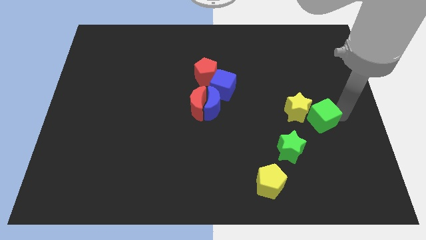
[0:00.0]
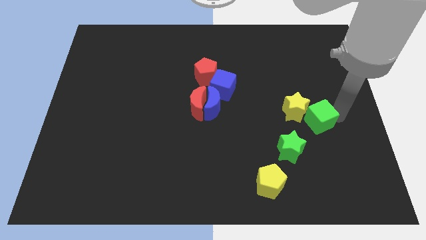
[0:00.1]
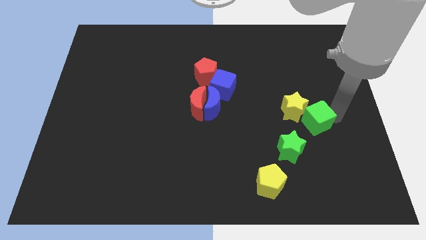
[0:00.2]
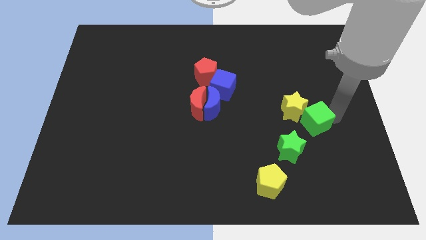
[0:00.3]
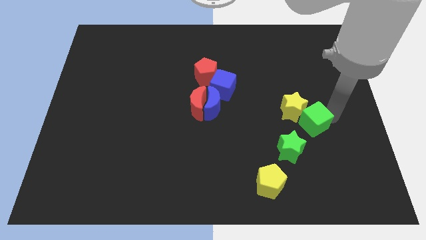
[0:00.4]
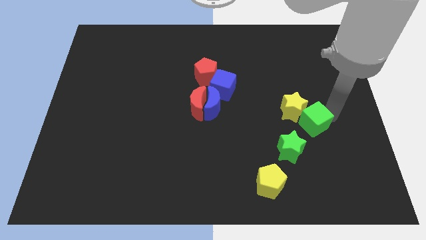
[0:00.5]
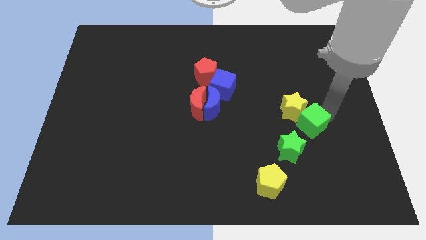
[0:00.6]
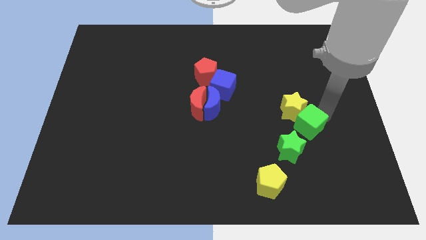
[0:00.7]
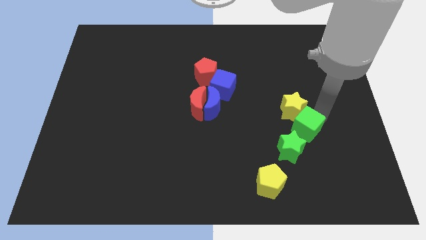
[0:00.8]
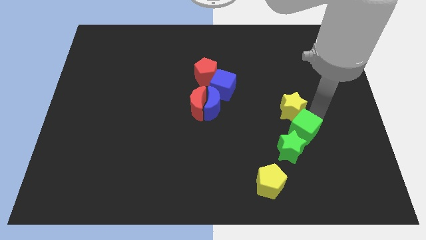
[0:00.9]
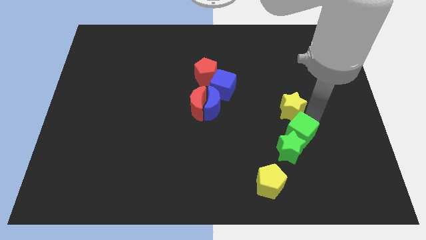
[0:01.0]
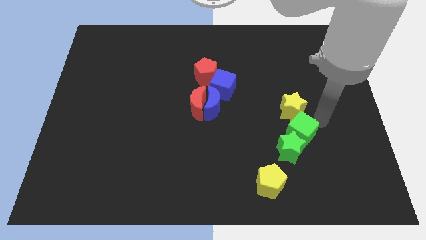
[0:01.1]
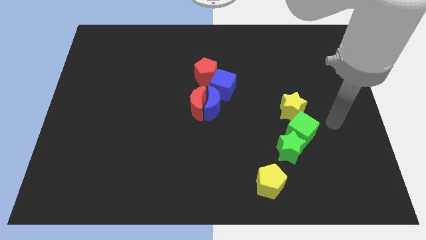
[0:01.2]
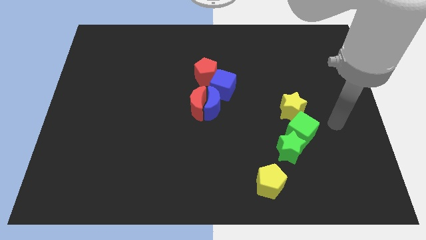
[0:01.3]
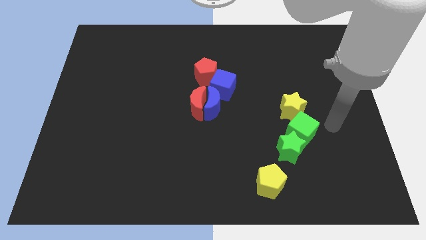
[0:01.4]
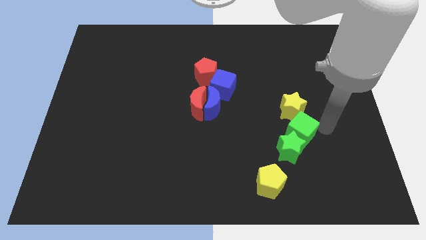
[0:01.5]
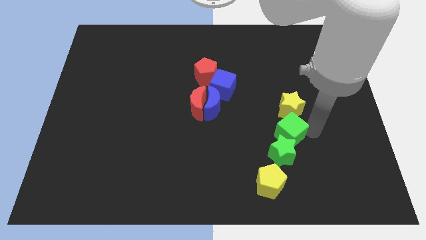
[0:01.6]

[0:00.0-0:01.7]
place the green cube below the yellow star

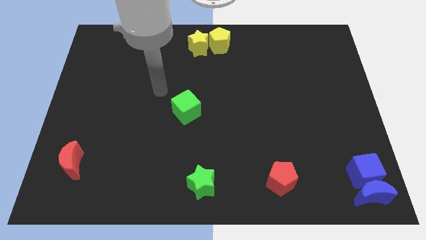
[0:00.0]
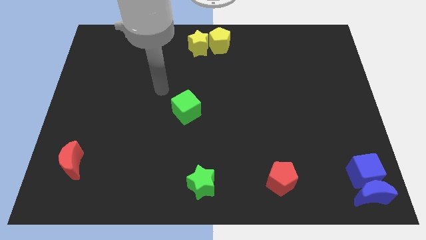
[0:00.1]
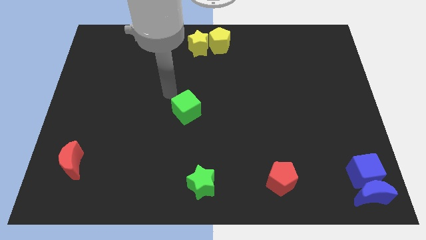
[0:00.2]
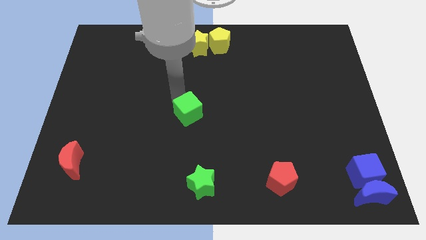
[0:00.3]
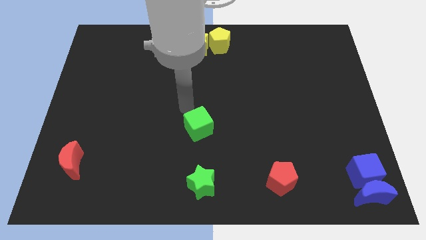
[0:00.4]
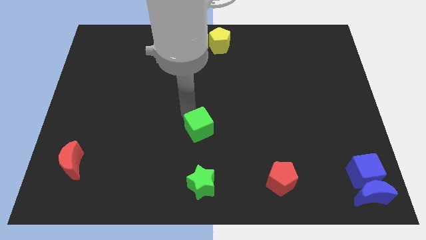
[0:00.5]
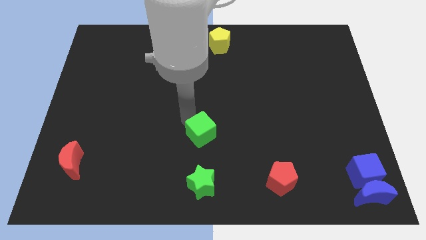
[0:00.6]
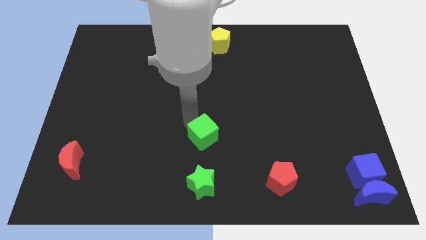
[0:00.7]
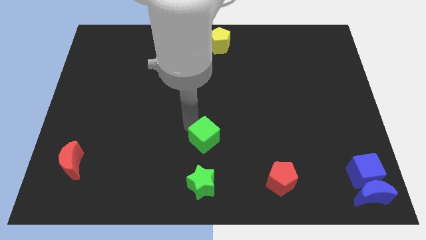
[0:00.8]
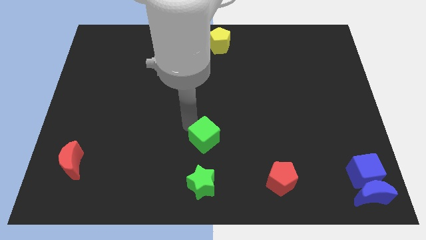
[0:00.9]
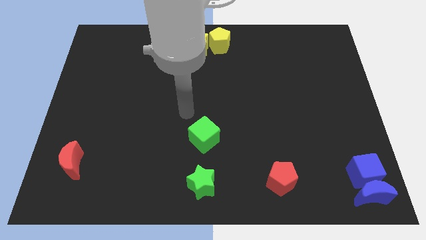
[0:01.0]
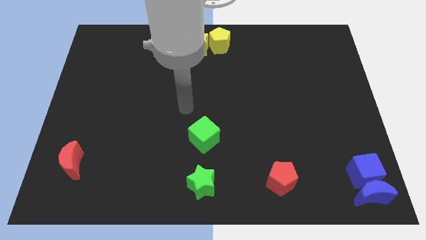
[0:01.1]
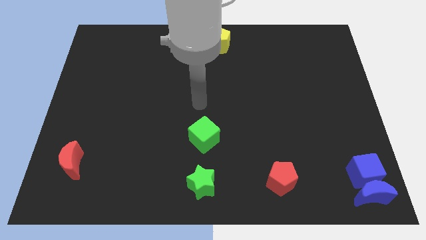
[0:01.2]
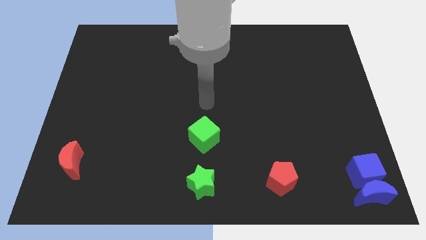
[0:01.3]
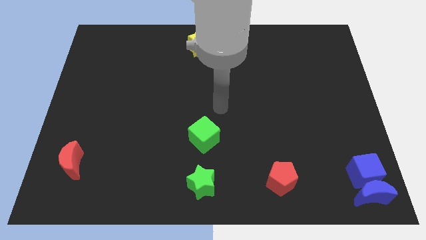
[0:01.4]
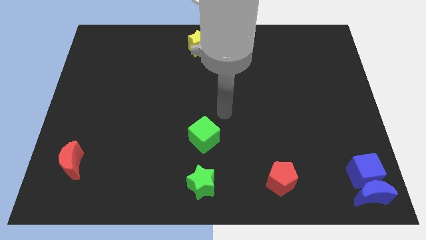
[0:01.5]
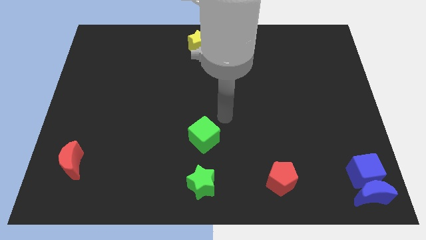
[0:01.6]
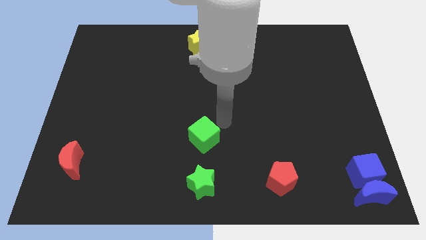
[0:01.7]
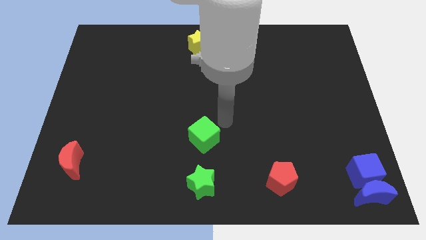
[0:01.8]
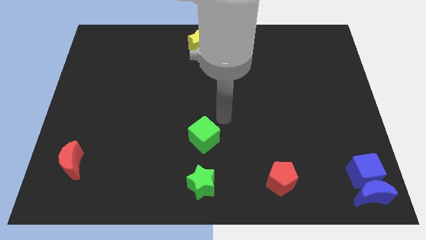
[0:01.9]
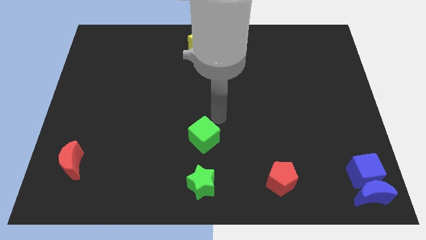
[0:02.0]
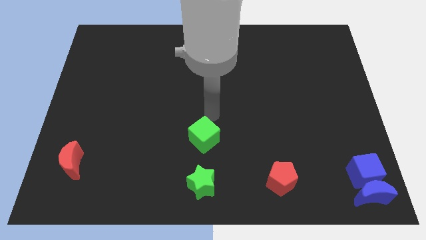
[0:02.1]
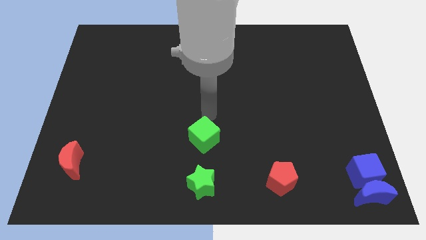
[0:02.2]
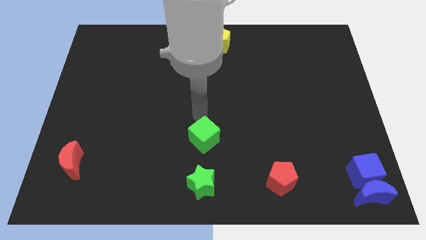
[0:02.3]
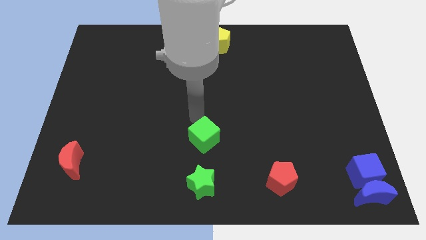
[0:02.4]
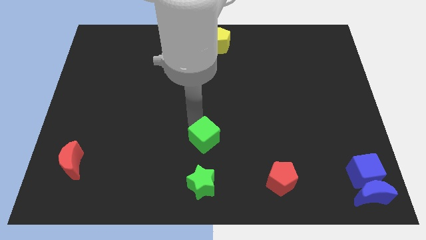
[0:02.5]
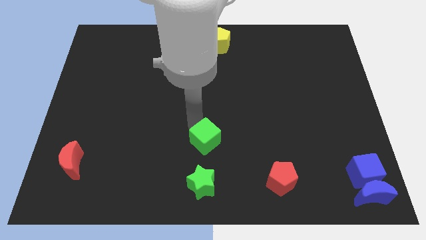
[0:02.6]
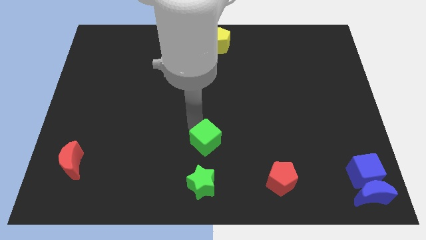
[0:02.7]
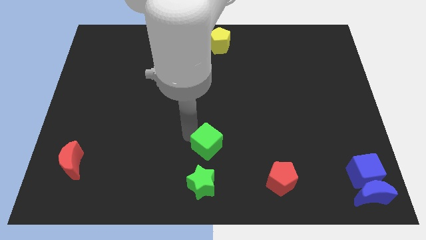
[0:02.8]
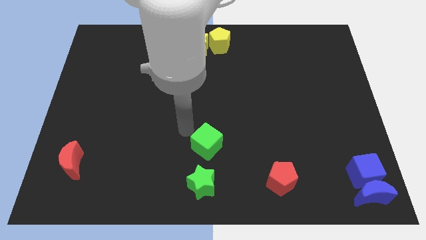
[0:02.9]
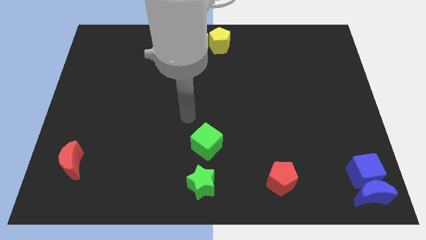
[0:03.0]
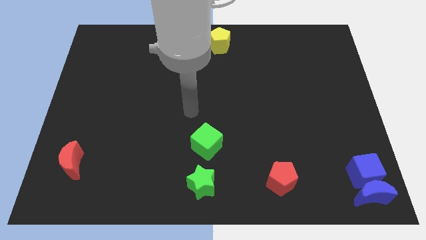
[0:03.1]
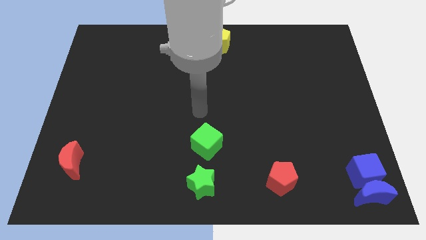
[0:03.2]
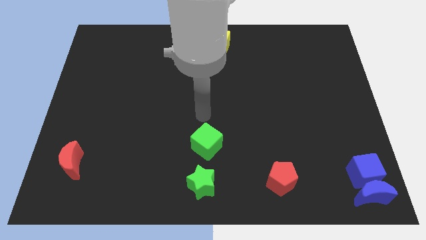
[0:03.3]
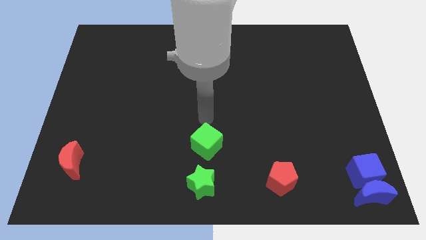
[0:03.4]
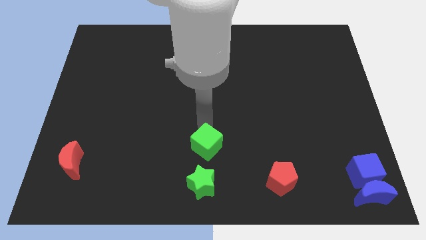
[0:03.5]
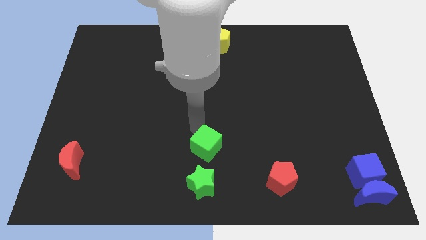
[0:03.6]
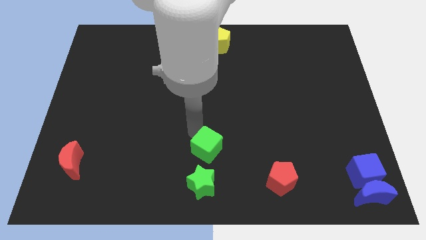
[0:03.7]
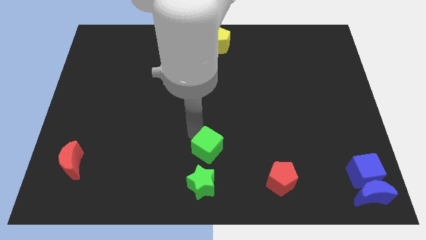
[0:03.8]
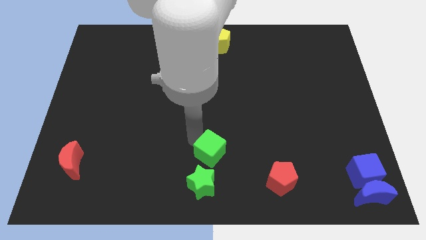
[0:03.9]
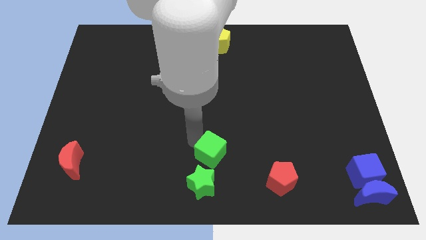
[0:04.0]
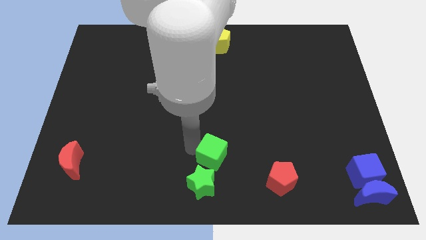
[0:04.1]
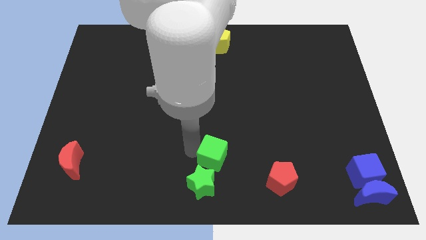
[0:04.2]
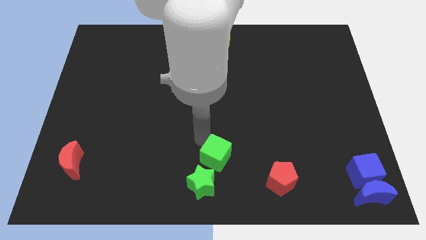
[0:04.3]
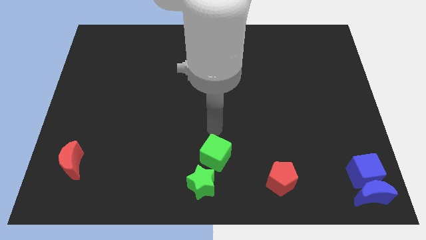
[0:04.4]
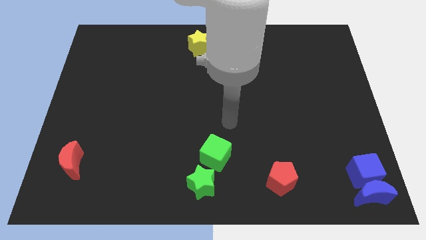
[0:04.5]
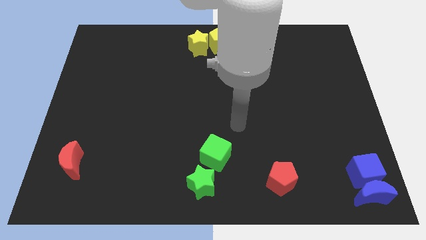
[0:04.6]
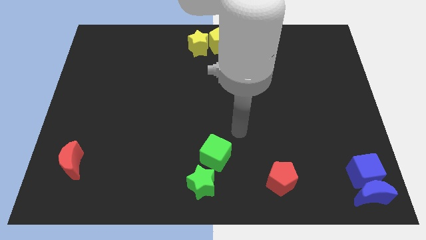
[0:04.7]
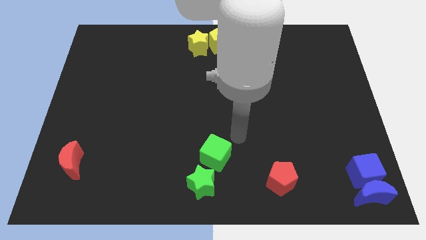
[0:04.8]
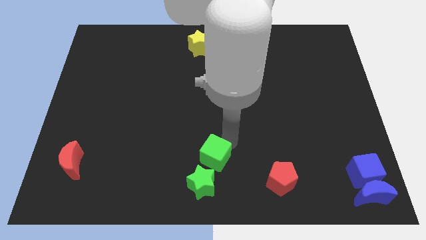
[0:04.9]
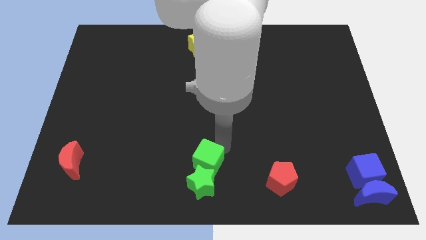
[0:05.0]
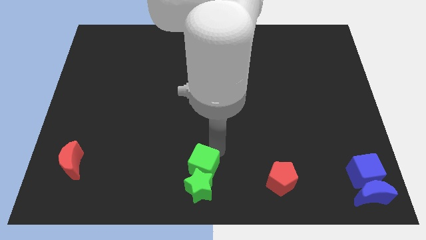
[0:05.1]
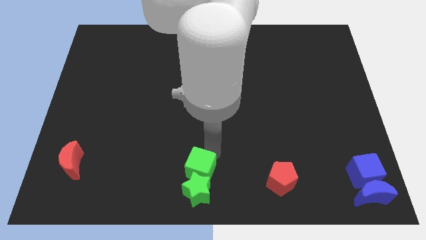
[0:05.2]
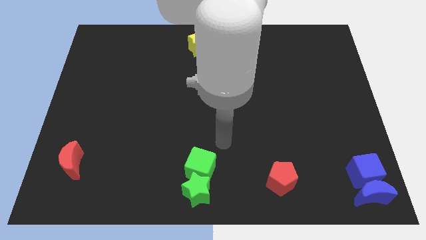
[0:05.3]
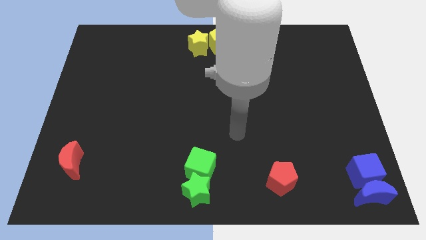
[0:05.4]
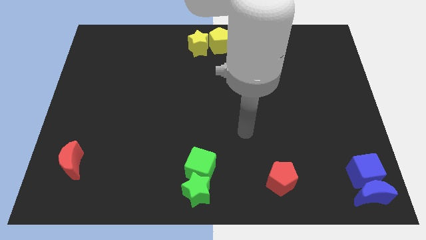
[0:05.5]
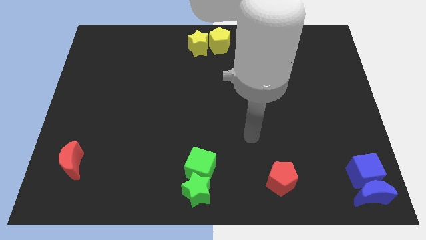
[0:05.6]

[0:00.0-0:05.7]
move the green cube to the top of the green star

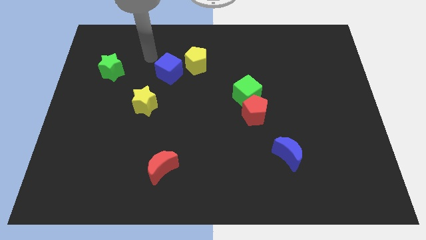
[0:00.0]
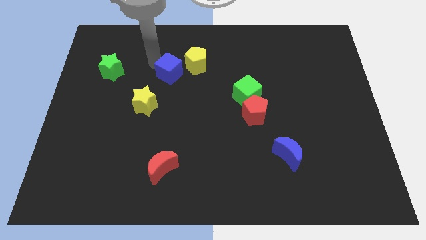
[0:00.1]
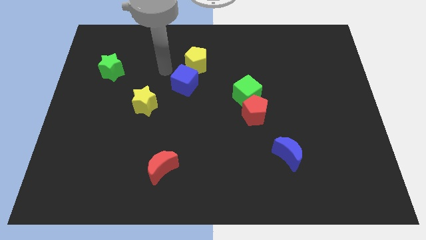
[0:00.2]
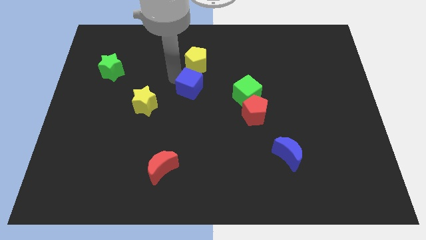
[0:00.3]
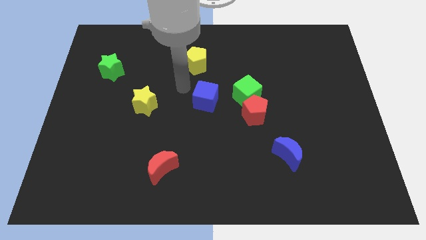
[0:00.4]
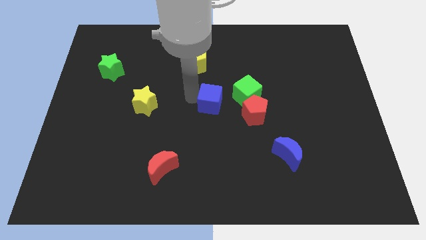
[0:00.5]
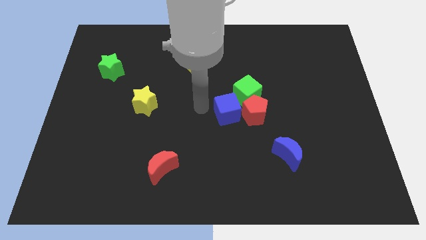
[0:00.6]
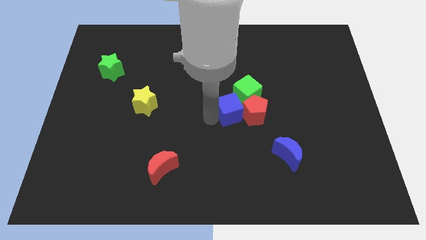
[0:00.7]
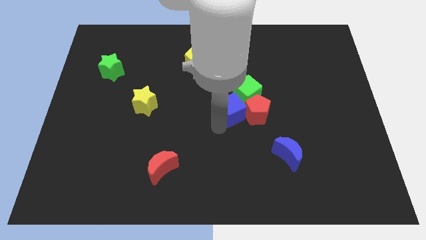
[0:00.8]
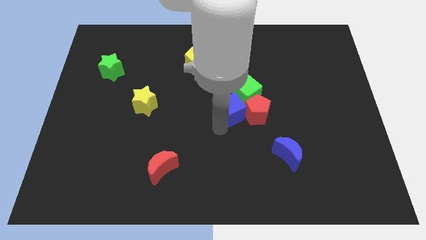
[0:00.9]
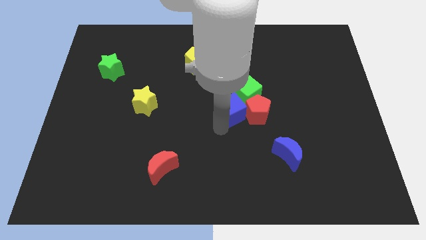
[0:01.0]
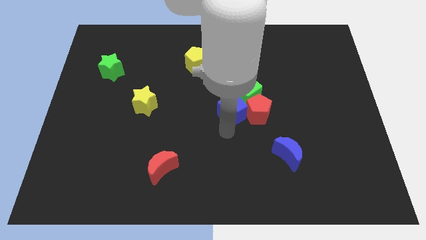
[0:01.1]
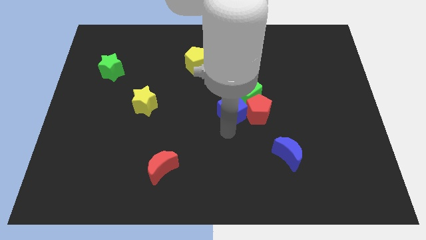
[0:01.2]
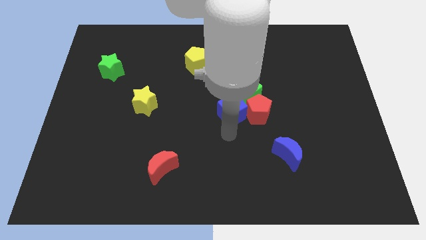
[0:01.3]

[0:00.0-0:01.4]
push the blue cube into the red pentagon

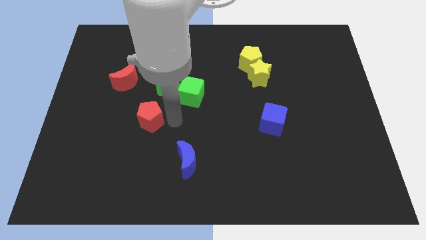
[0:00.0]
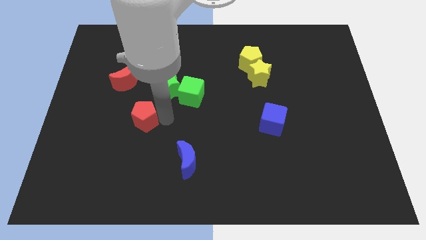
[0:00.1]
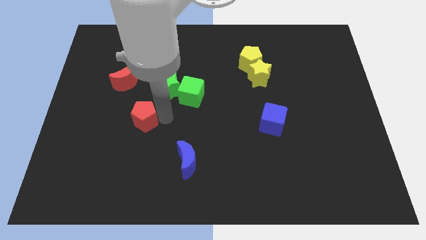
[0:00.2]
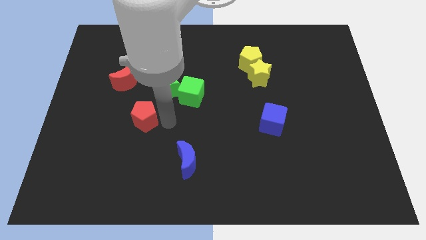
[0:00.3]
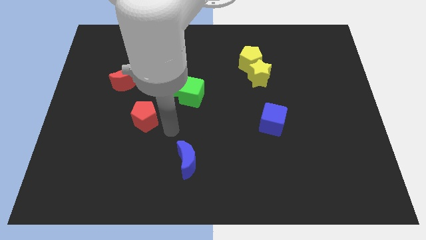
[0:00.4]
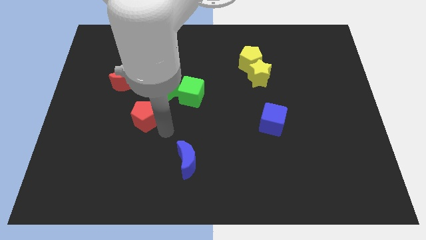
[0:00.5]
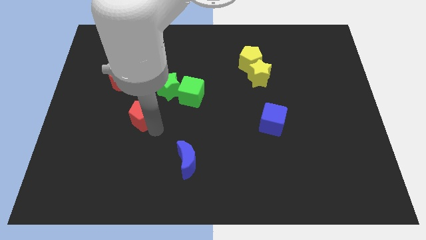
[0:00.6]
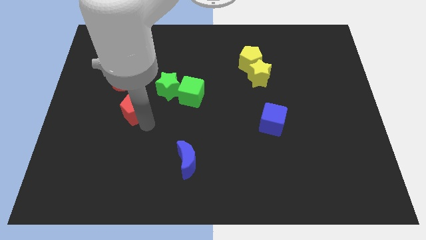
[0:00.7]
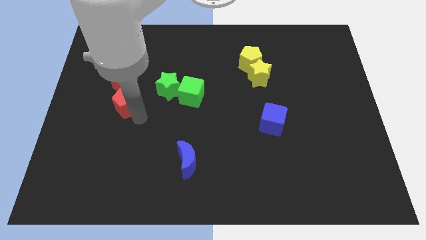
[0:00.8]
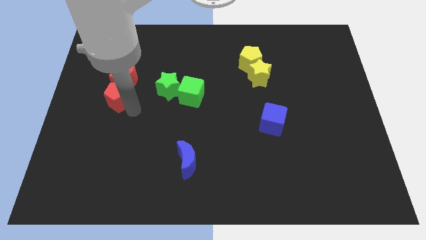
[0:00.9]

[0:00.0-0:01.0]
place the red pentagon underneath the red moon
